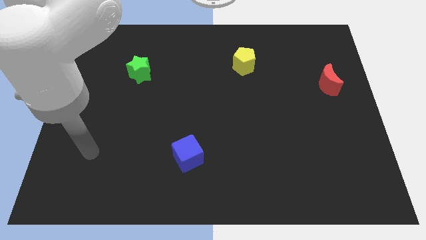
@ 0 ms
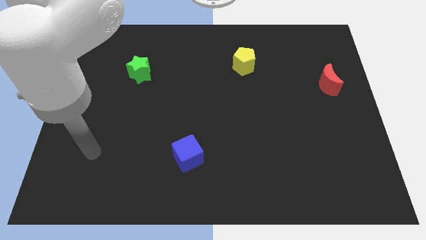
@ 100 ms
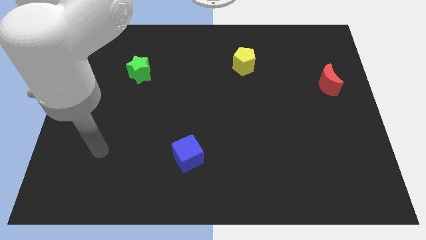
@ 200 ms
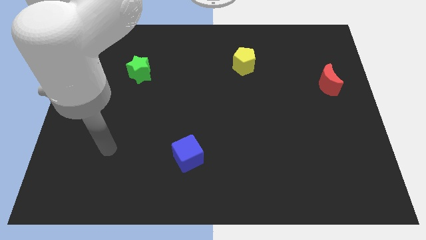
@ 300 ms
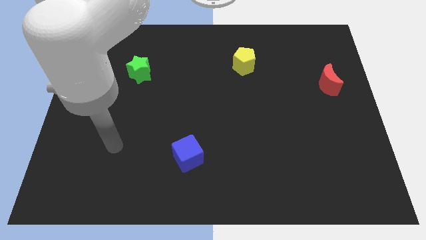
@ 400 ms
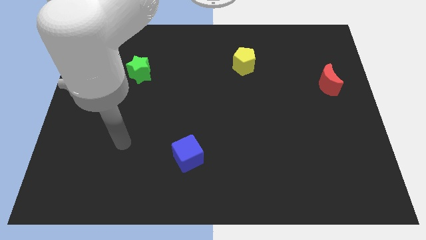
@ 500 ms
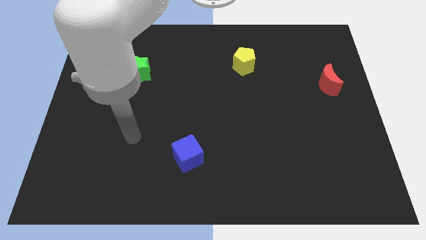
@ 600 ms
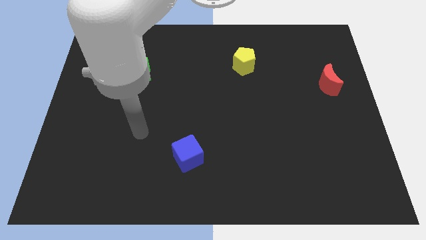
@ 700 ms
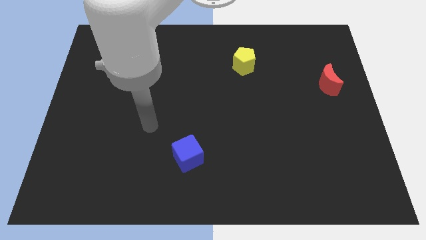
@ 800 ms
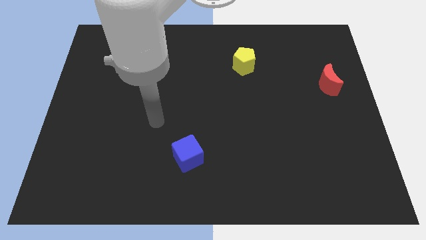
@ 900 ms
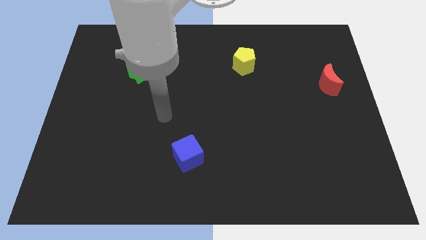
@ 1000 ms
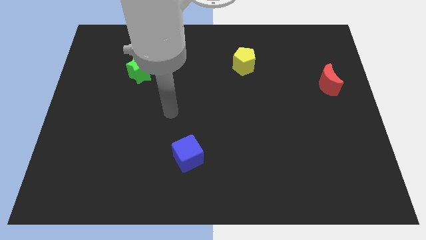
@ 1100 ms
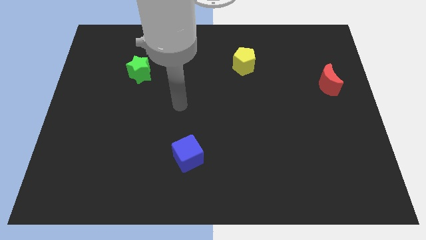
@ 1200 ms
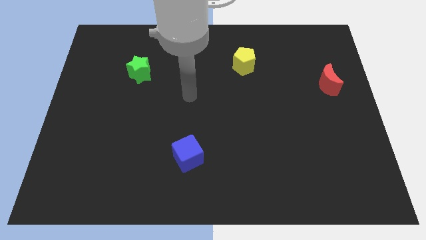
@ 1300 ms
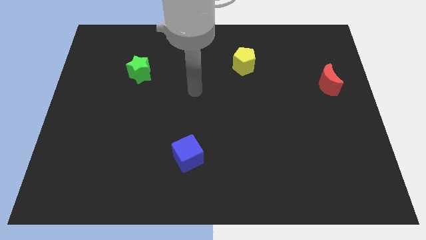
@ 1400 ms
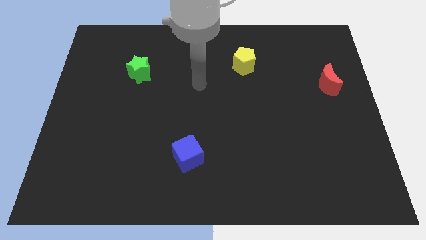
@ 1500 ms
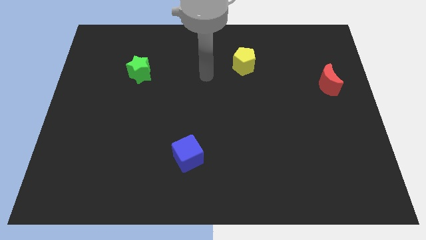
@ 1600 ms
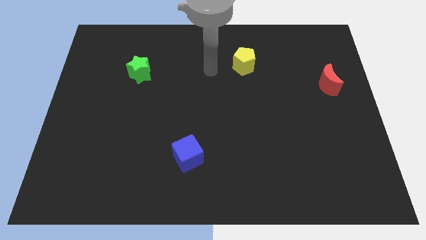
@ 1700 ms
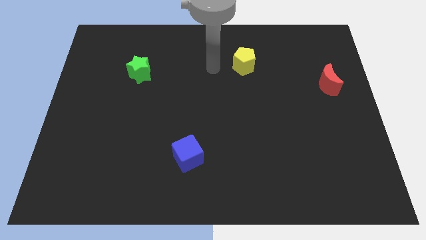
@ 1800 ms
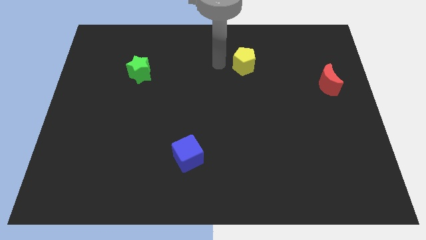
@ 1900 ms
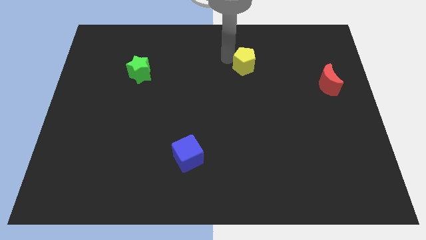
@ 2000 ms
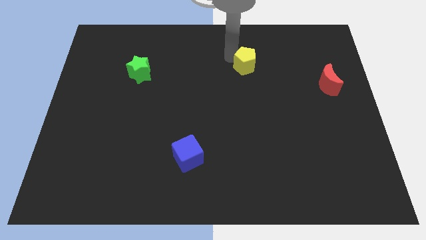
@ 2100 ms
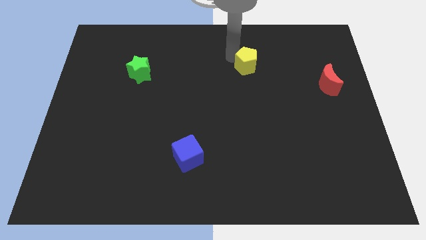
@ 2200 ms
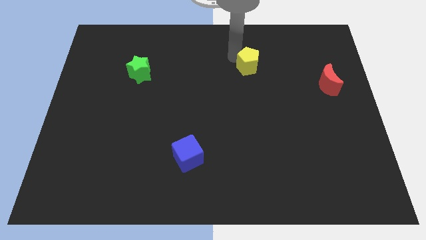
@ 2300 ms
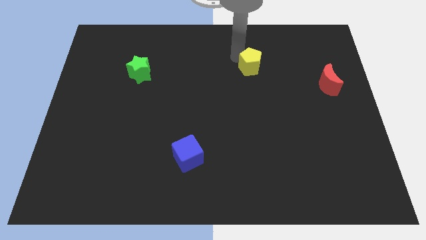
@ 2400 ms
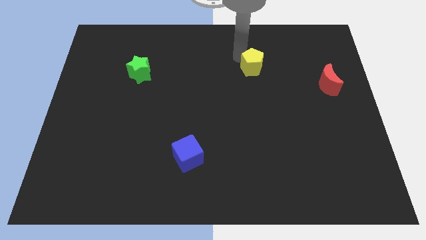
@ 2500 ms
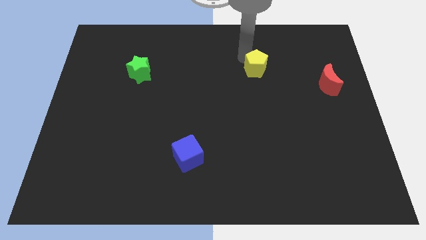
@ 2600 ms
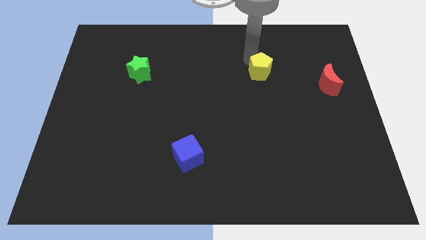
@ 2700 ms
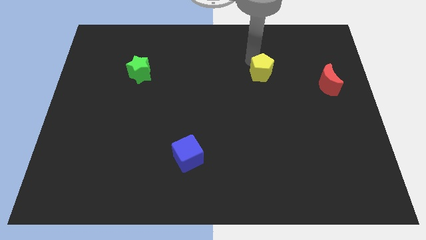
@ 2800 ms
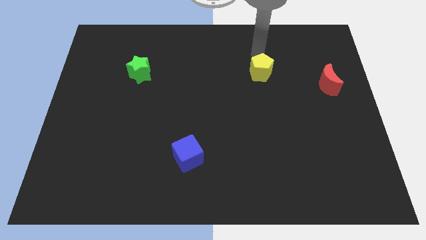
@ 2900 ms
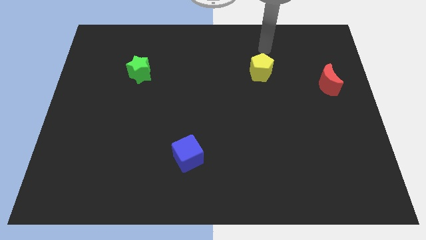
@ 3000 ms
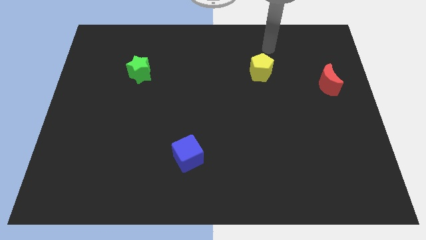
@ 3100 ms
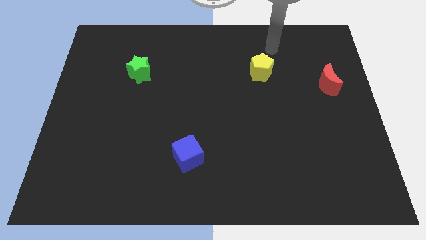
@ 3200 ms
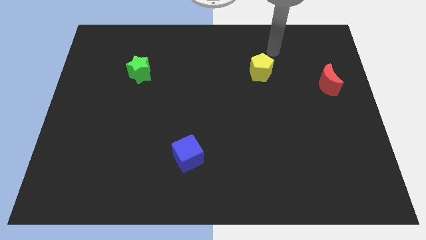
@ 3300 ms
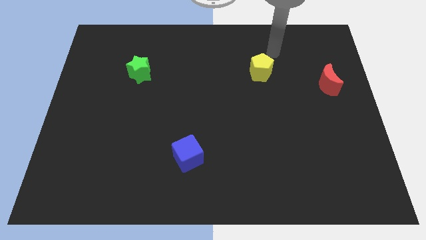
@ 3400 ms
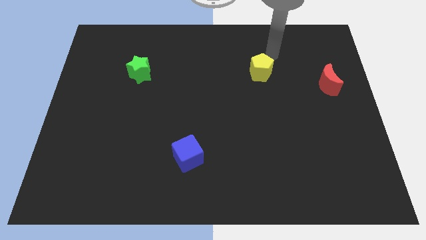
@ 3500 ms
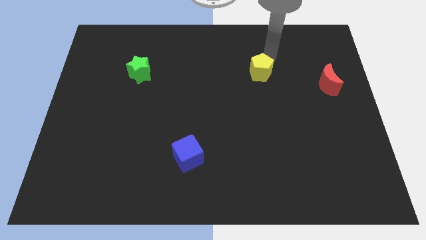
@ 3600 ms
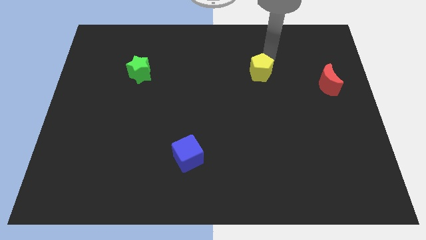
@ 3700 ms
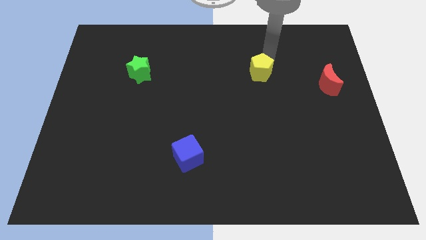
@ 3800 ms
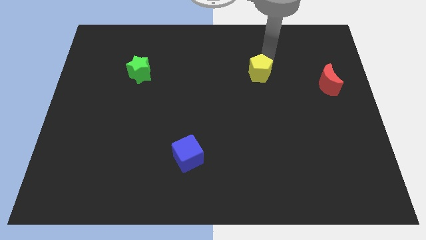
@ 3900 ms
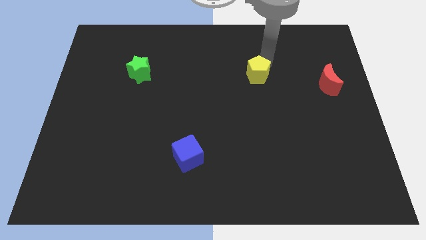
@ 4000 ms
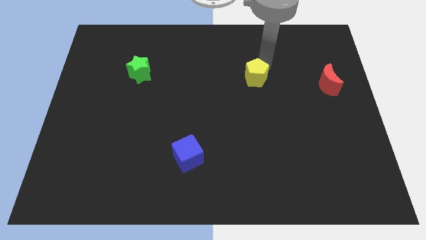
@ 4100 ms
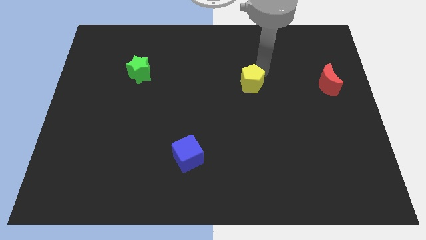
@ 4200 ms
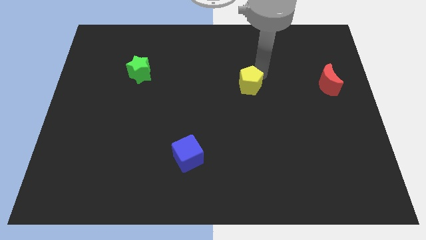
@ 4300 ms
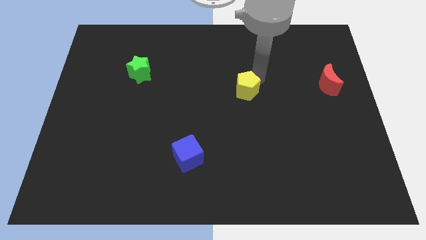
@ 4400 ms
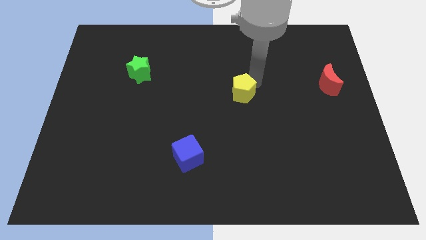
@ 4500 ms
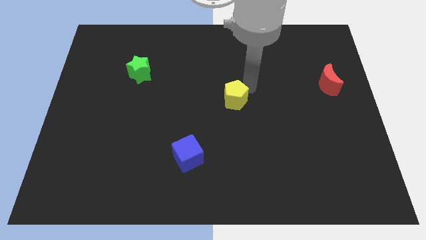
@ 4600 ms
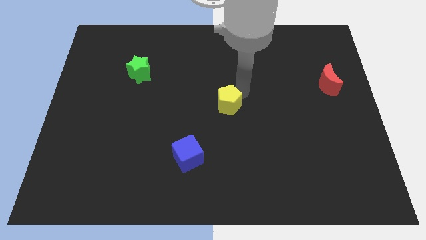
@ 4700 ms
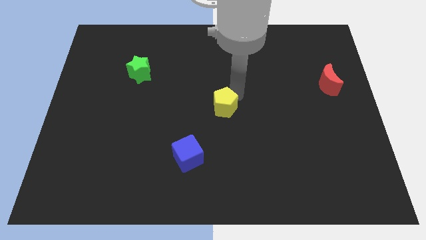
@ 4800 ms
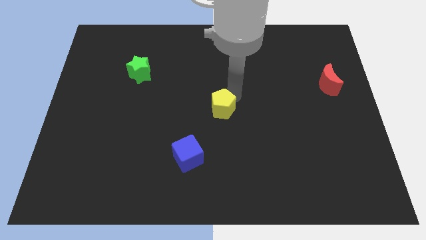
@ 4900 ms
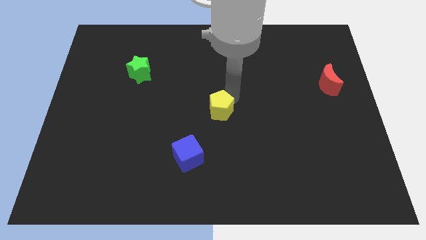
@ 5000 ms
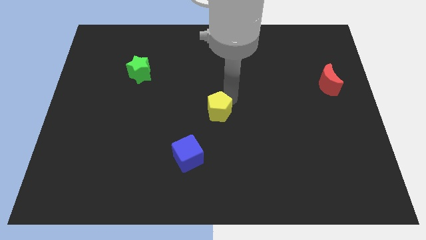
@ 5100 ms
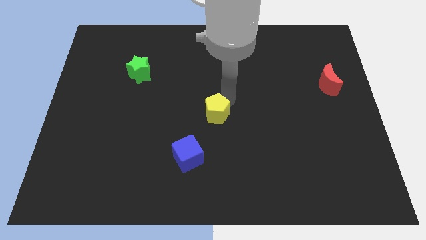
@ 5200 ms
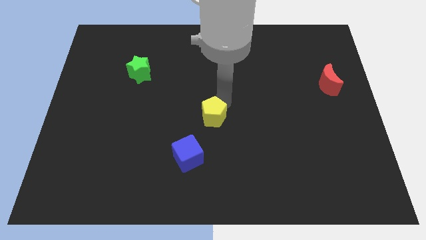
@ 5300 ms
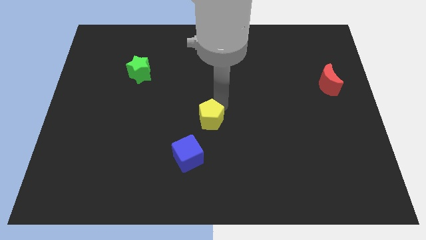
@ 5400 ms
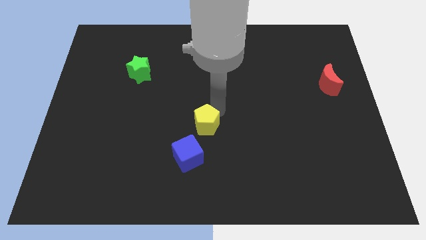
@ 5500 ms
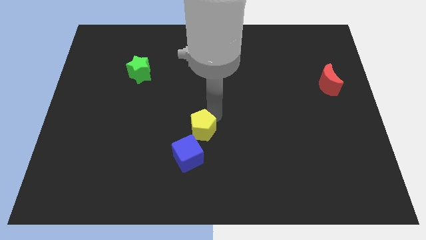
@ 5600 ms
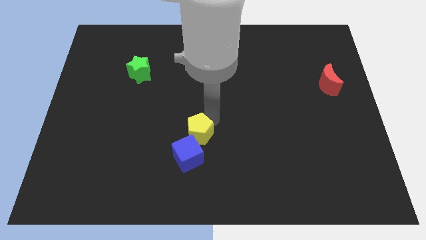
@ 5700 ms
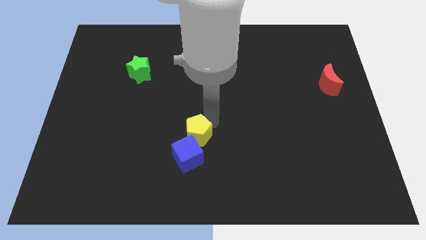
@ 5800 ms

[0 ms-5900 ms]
push the yellow block close to the cube

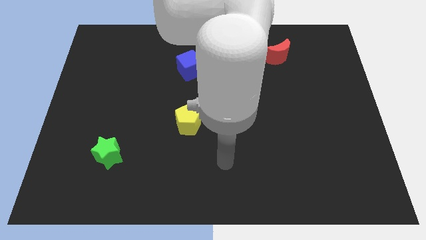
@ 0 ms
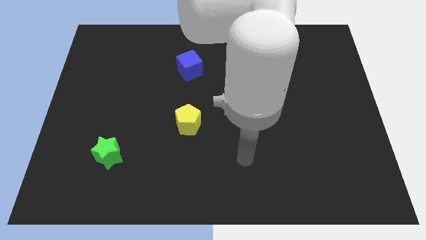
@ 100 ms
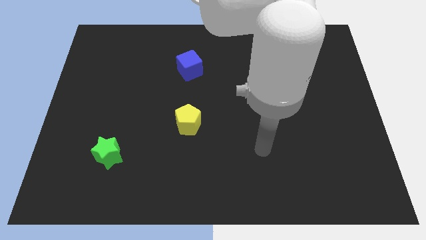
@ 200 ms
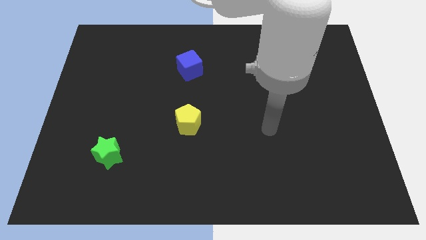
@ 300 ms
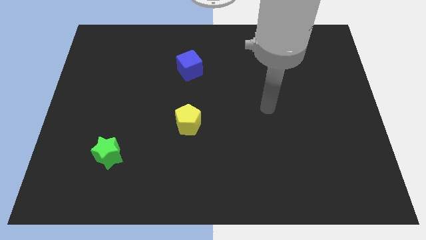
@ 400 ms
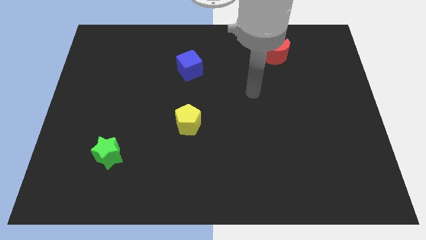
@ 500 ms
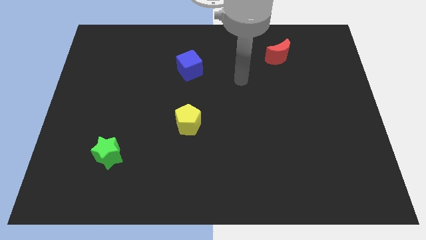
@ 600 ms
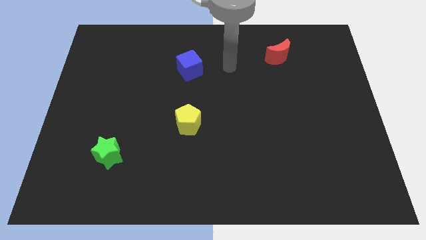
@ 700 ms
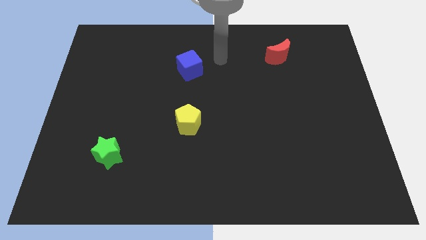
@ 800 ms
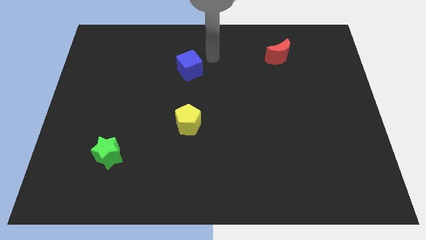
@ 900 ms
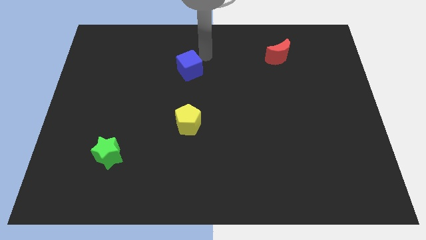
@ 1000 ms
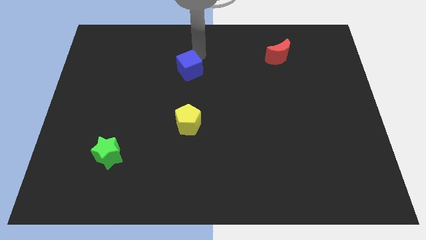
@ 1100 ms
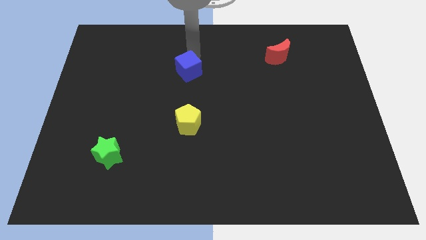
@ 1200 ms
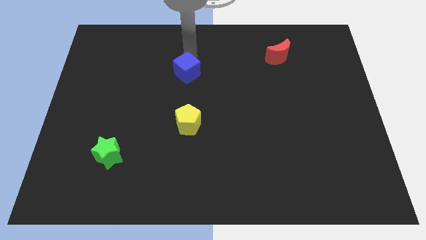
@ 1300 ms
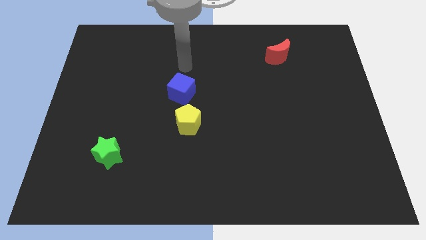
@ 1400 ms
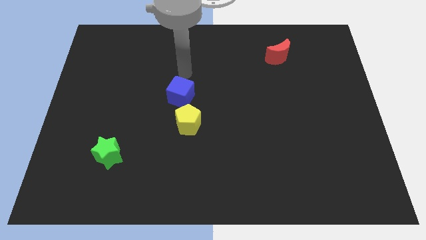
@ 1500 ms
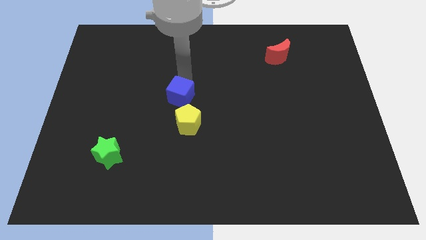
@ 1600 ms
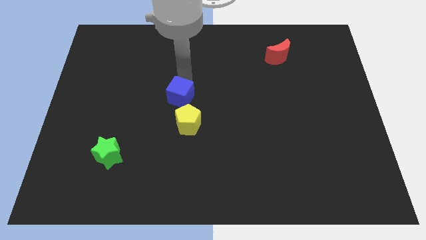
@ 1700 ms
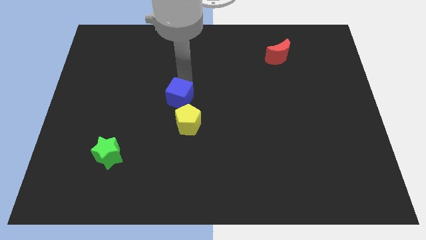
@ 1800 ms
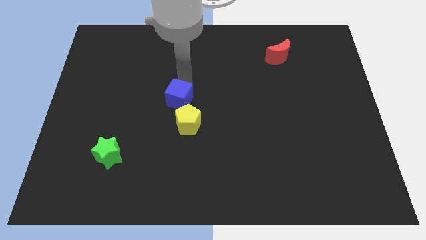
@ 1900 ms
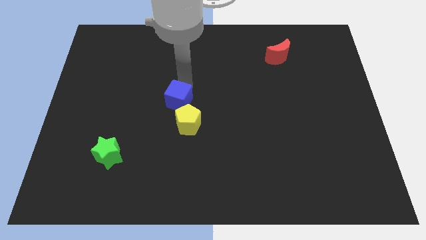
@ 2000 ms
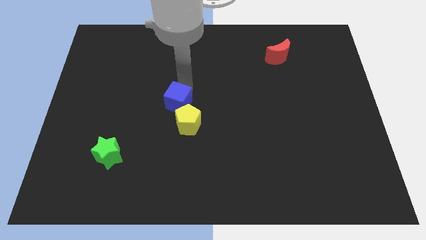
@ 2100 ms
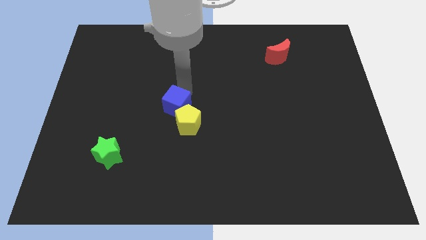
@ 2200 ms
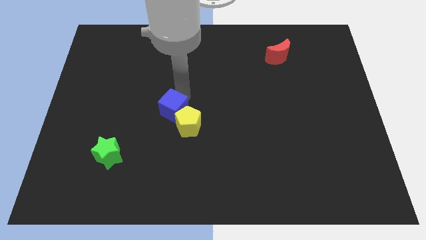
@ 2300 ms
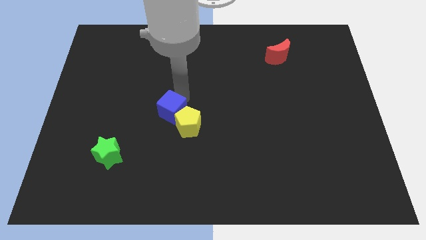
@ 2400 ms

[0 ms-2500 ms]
push the cube towards the yellow pentagon

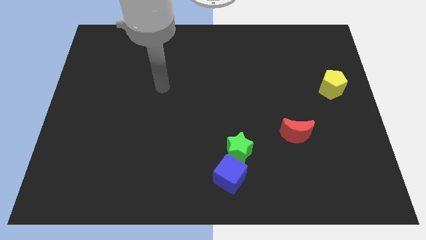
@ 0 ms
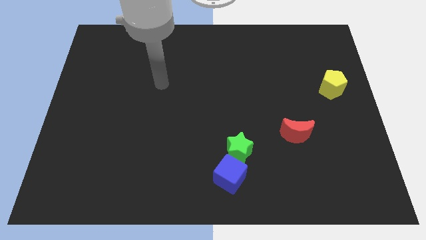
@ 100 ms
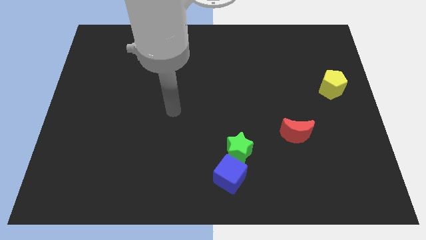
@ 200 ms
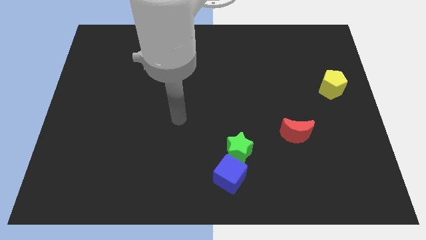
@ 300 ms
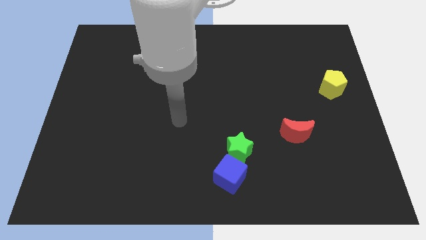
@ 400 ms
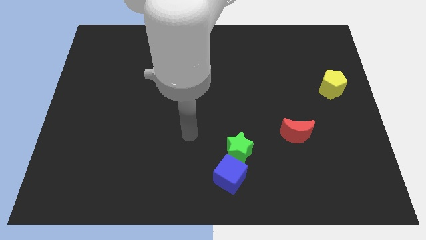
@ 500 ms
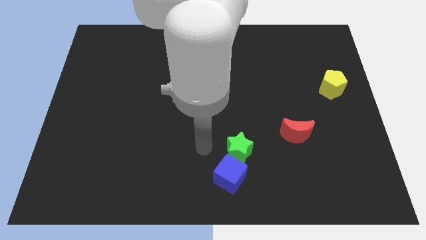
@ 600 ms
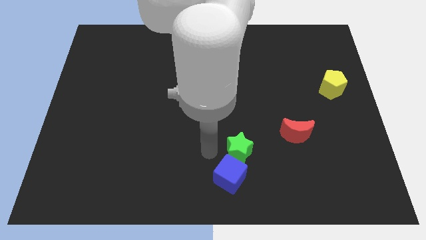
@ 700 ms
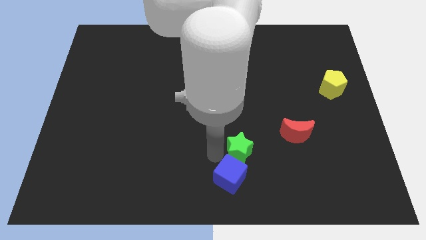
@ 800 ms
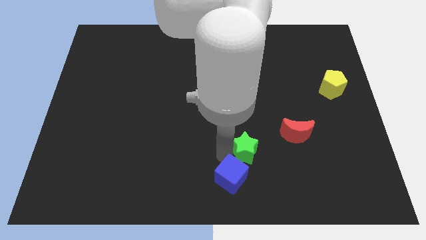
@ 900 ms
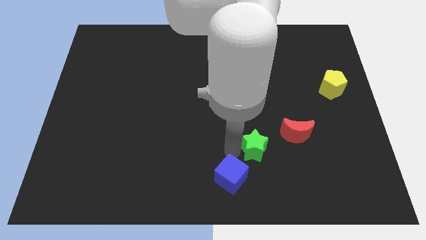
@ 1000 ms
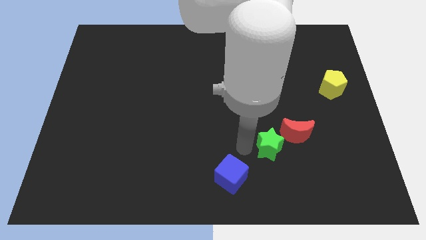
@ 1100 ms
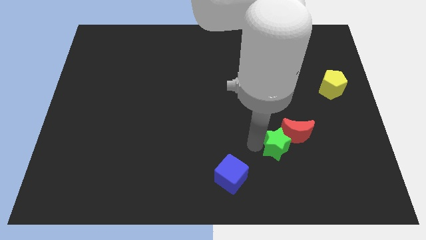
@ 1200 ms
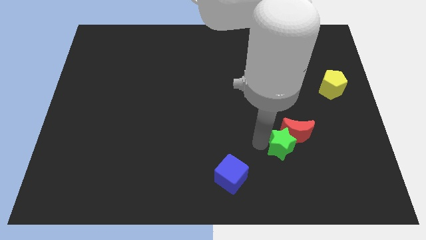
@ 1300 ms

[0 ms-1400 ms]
put the green star next to the red block
